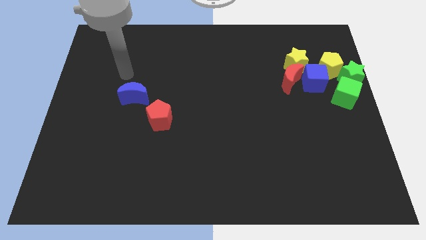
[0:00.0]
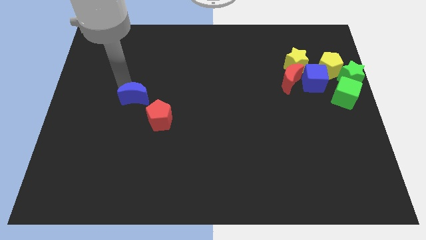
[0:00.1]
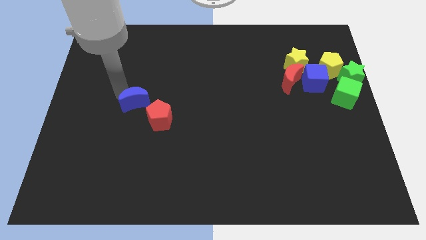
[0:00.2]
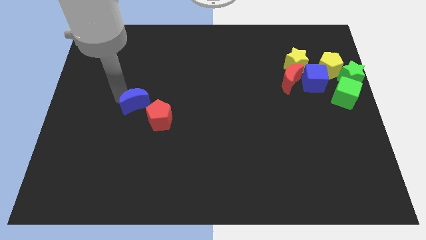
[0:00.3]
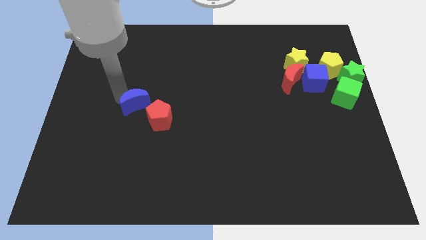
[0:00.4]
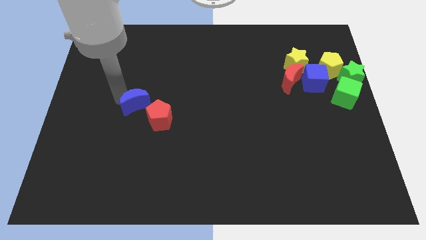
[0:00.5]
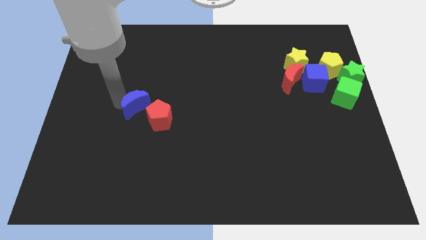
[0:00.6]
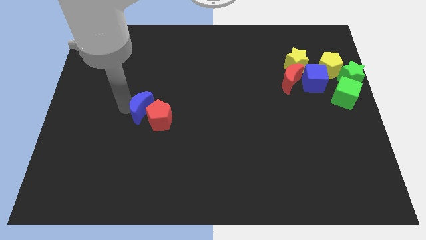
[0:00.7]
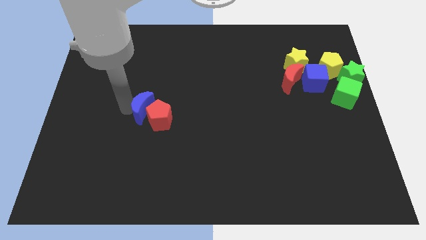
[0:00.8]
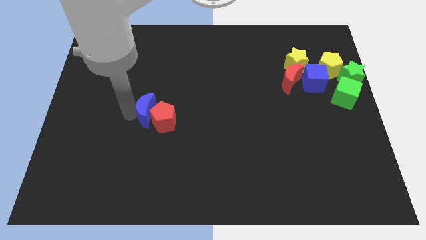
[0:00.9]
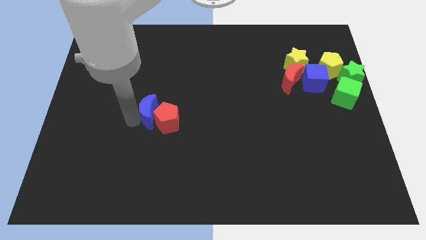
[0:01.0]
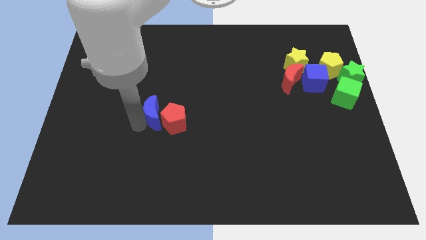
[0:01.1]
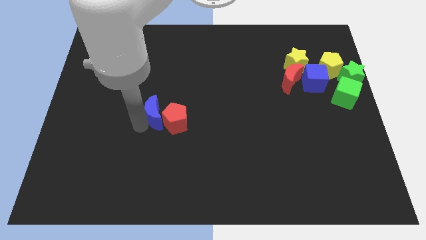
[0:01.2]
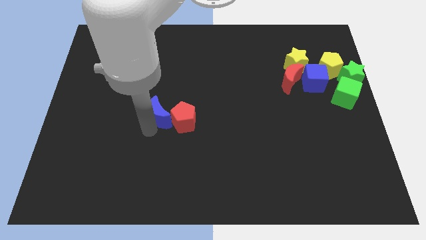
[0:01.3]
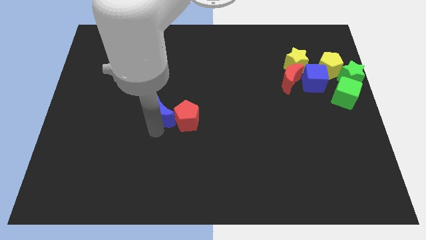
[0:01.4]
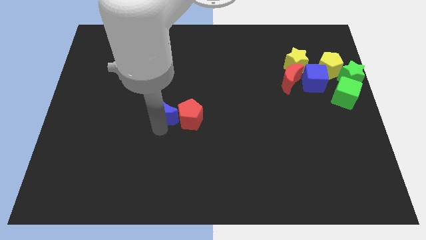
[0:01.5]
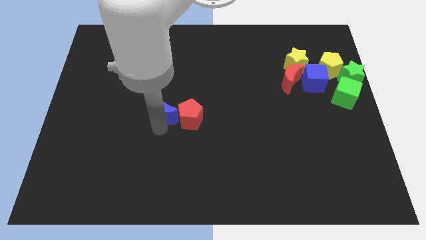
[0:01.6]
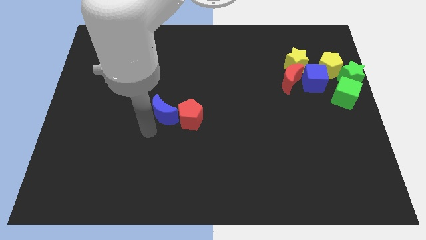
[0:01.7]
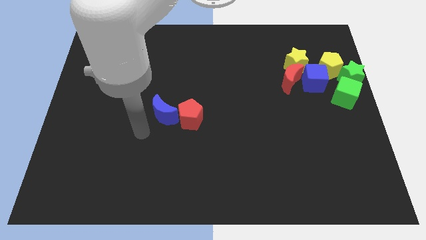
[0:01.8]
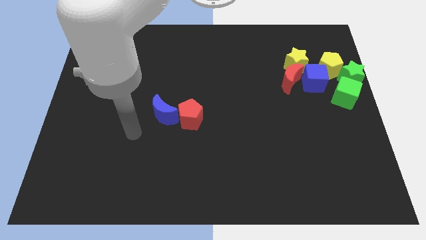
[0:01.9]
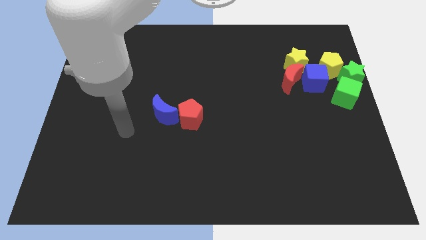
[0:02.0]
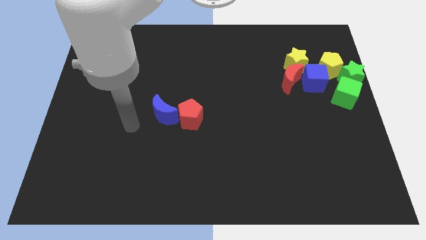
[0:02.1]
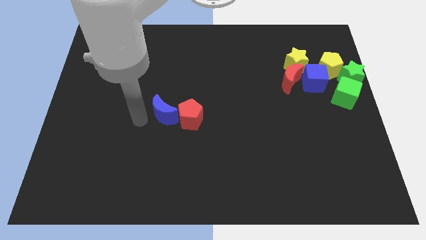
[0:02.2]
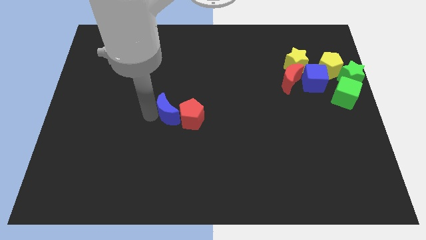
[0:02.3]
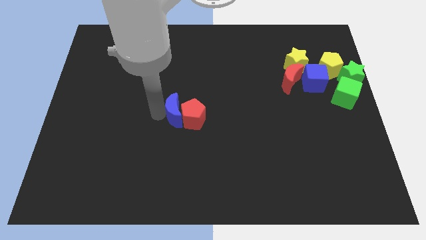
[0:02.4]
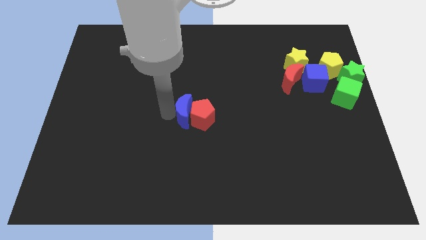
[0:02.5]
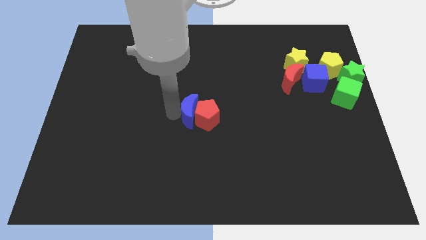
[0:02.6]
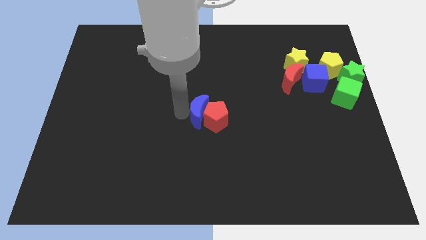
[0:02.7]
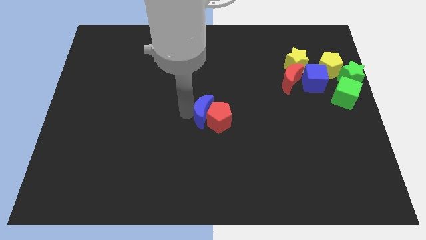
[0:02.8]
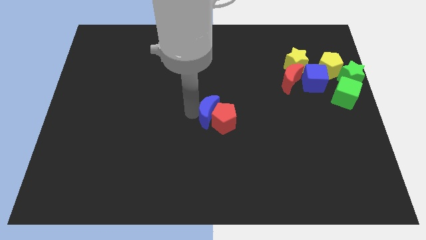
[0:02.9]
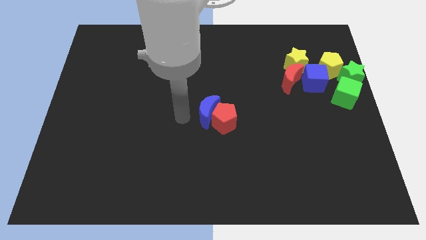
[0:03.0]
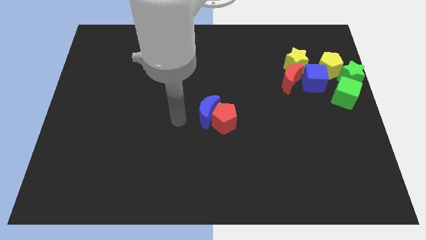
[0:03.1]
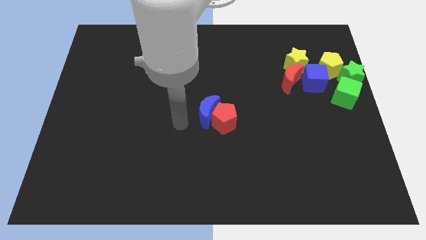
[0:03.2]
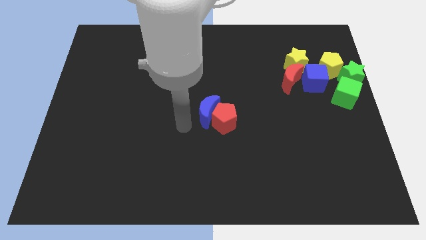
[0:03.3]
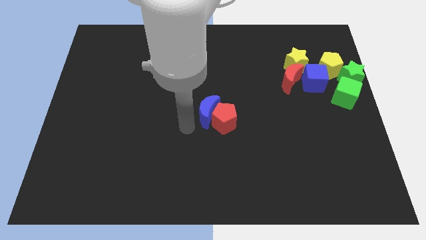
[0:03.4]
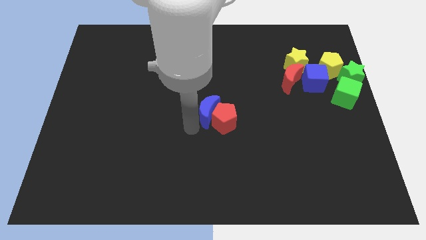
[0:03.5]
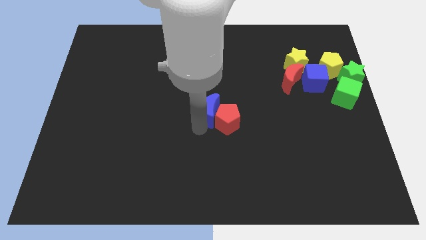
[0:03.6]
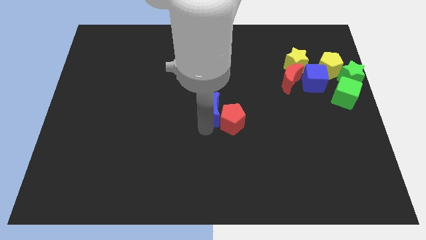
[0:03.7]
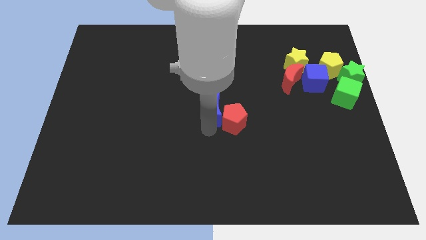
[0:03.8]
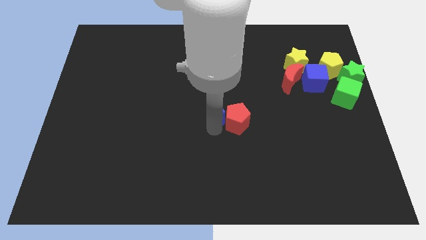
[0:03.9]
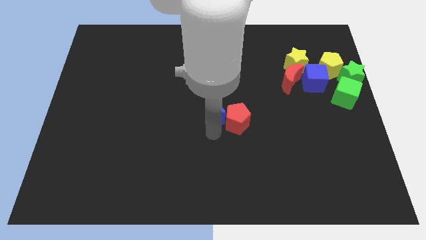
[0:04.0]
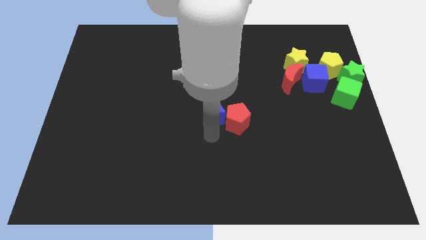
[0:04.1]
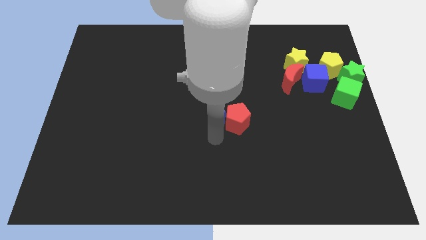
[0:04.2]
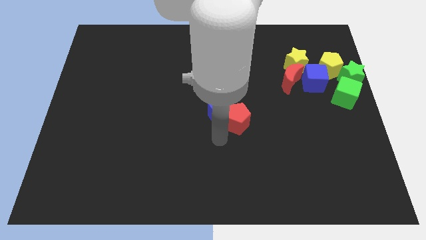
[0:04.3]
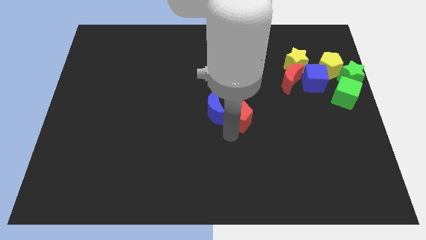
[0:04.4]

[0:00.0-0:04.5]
push the red pentagon and blue crescent to the center of board

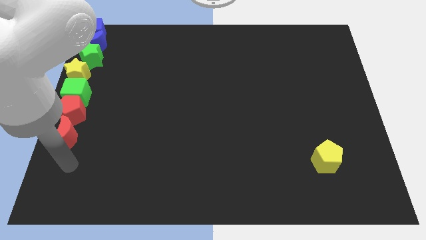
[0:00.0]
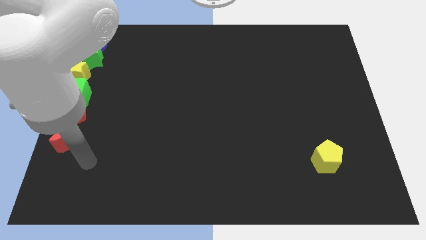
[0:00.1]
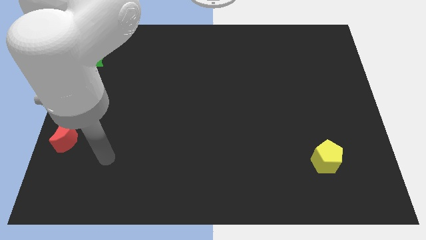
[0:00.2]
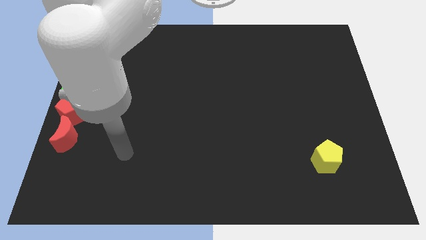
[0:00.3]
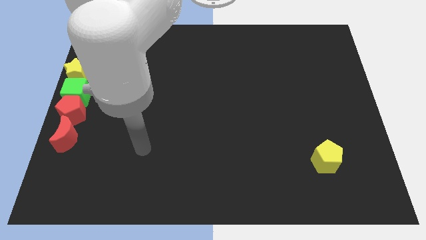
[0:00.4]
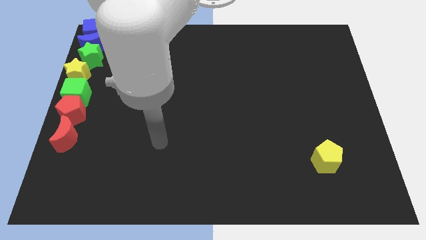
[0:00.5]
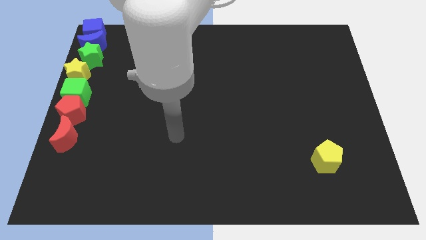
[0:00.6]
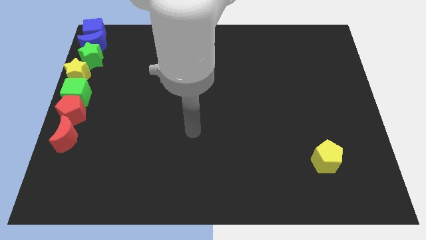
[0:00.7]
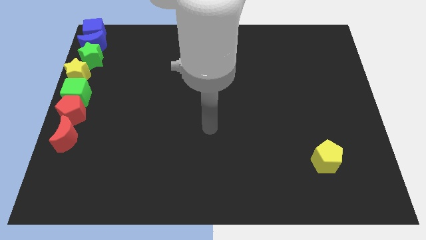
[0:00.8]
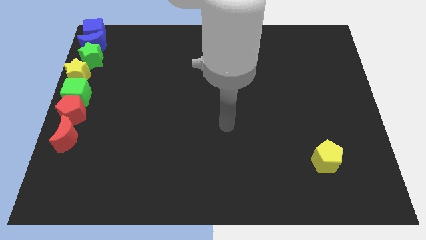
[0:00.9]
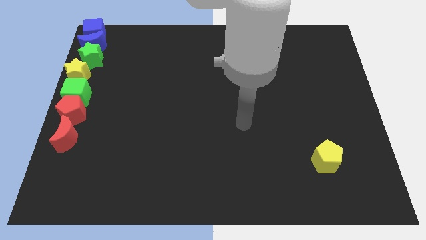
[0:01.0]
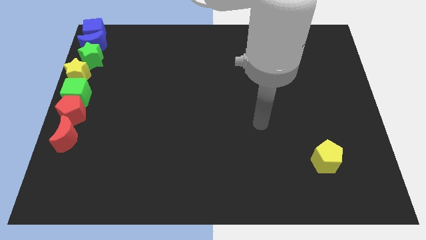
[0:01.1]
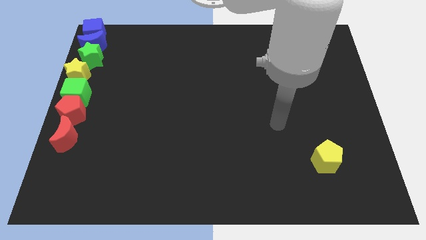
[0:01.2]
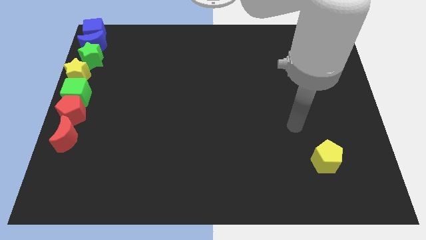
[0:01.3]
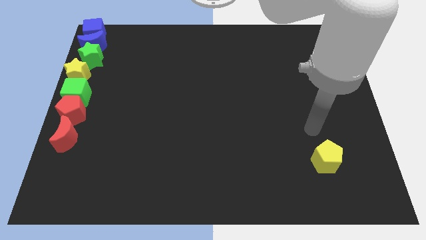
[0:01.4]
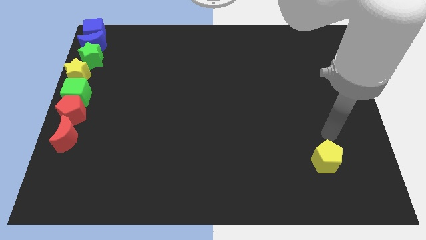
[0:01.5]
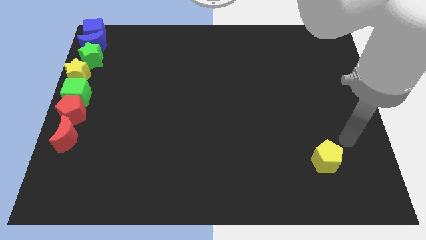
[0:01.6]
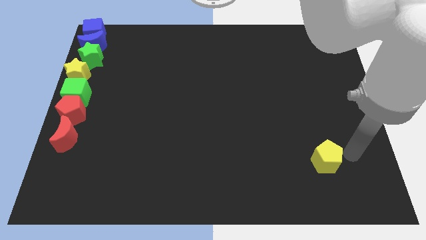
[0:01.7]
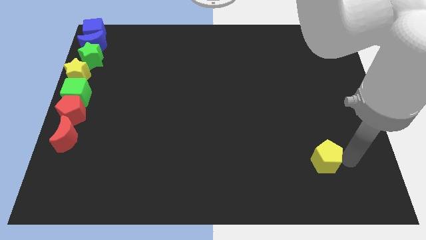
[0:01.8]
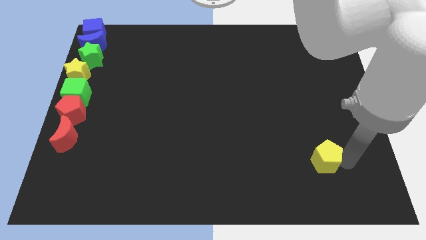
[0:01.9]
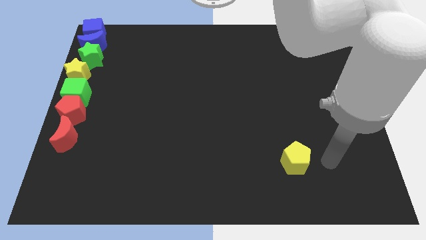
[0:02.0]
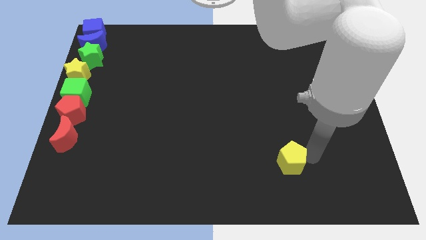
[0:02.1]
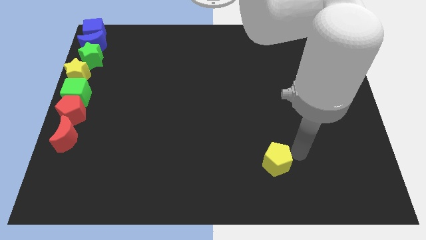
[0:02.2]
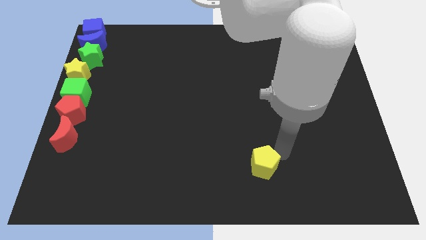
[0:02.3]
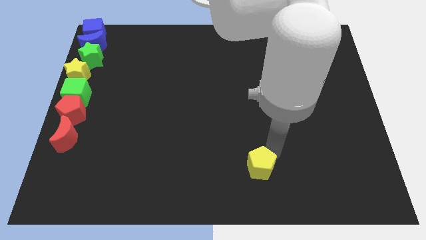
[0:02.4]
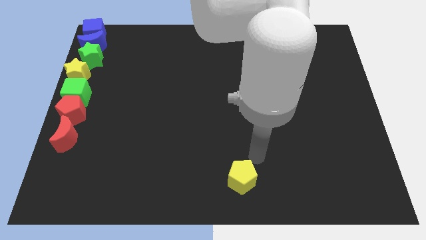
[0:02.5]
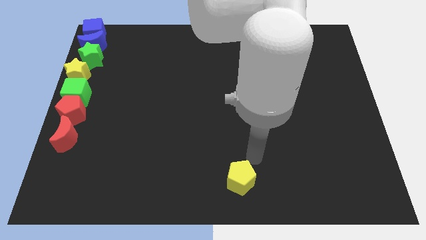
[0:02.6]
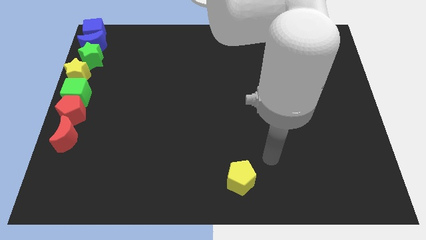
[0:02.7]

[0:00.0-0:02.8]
push the yellow pentagon to the bottom center

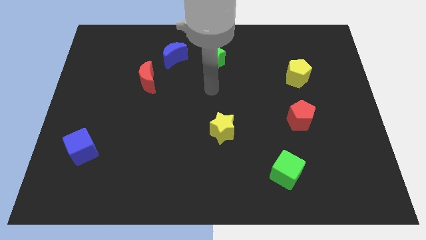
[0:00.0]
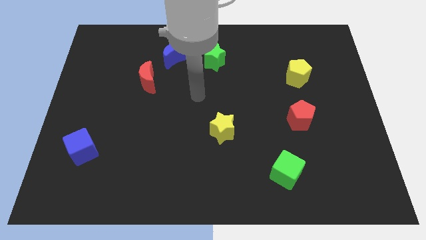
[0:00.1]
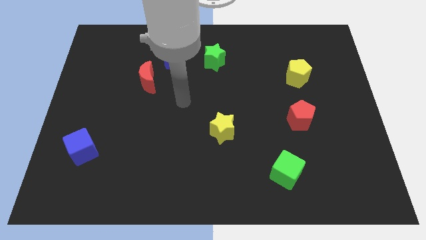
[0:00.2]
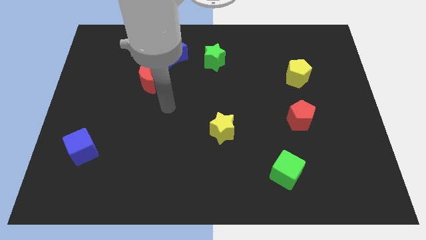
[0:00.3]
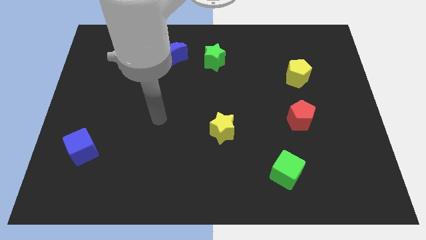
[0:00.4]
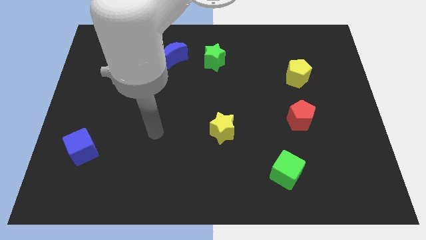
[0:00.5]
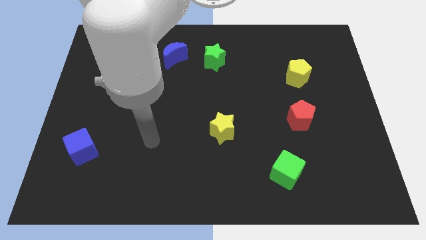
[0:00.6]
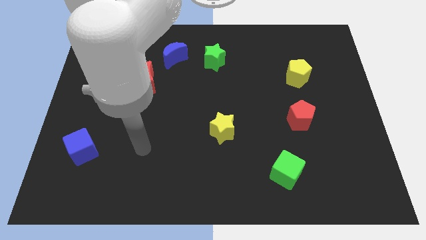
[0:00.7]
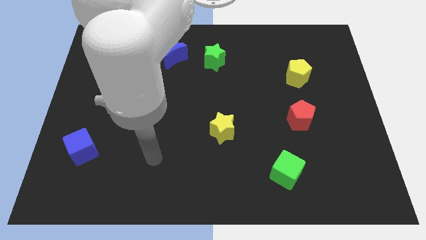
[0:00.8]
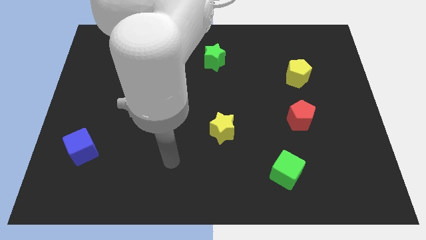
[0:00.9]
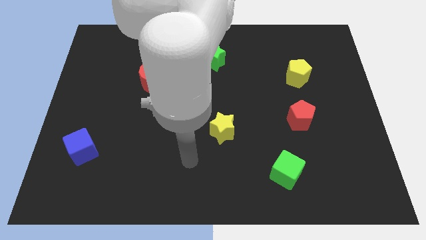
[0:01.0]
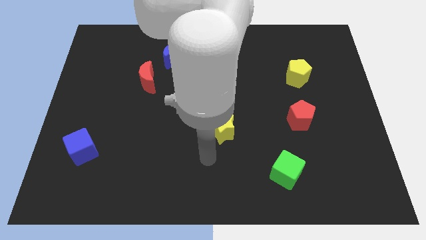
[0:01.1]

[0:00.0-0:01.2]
move your arm towards the yellow star

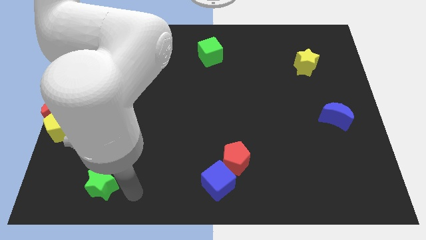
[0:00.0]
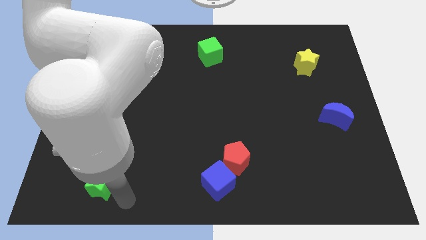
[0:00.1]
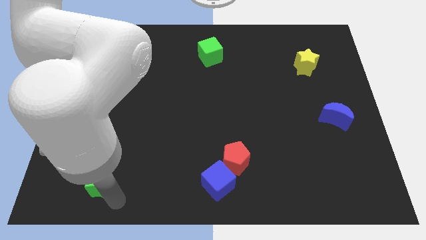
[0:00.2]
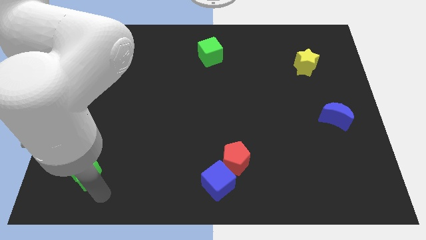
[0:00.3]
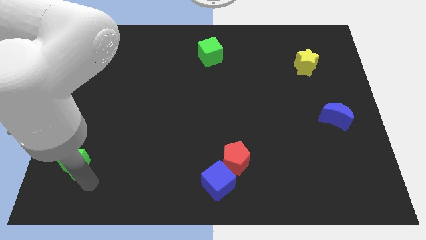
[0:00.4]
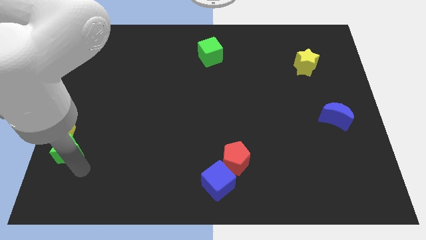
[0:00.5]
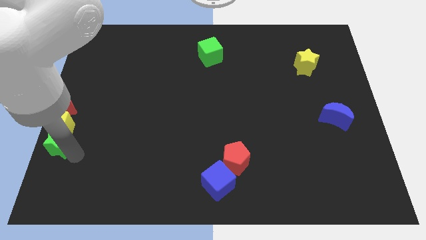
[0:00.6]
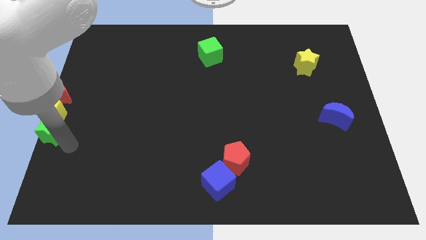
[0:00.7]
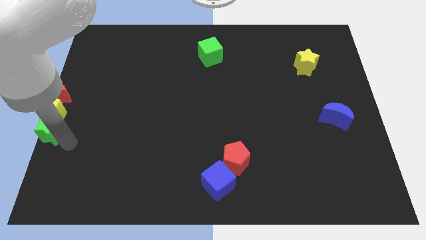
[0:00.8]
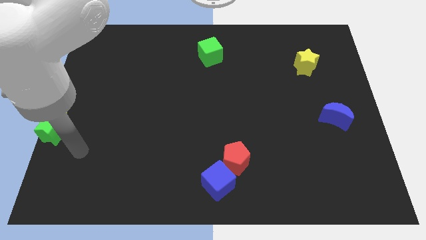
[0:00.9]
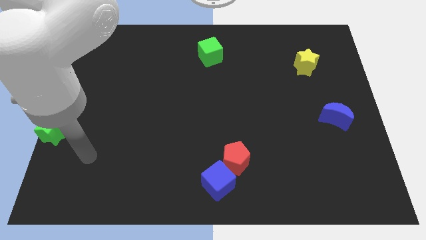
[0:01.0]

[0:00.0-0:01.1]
push the green star into the yellow pentagon
